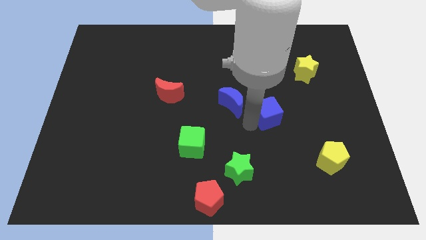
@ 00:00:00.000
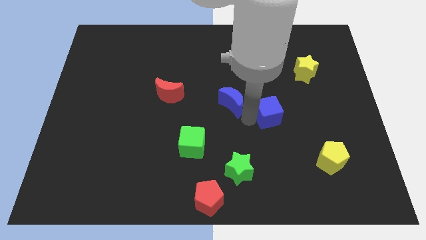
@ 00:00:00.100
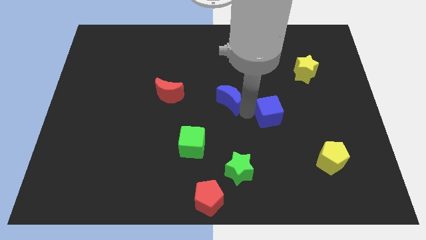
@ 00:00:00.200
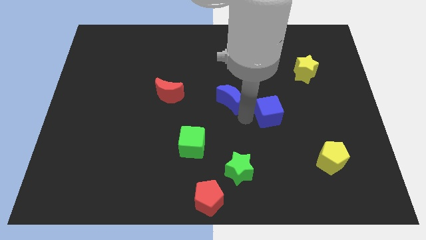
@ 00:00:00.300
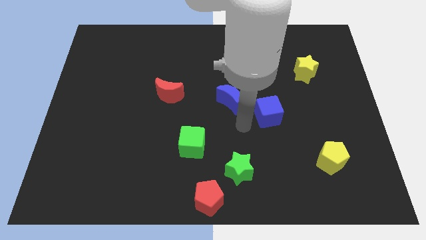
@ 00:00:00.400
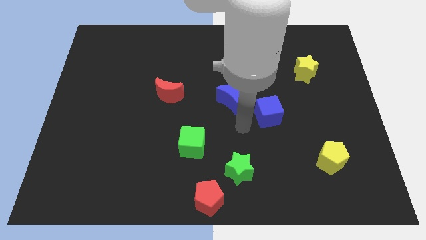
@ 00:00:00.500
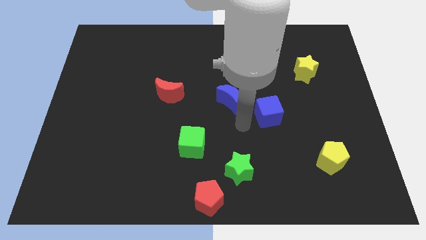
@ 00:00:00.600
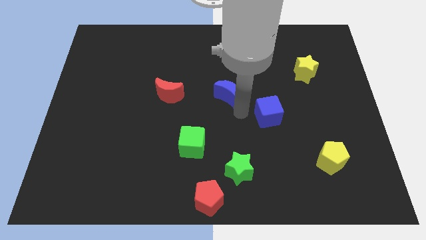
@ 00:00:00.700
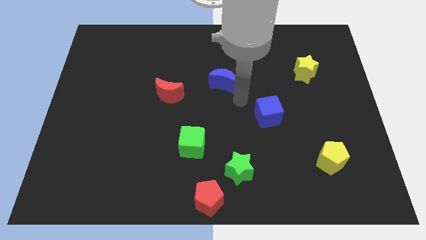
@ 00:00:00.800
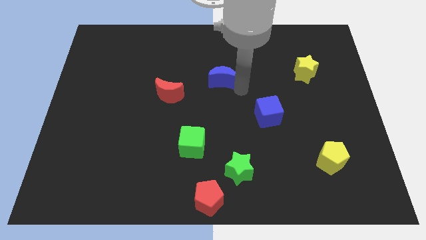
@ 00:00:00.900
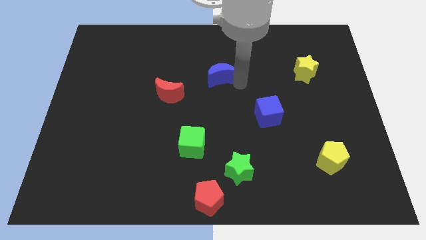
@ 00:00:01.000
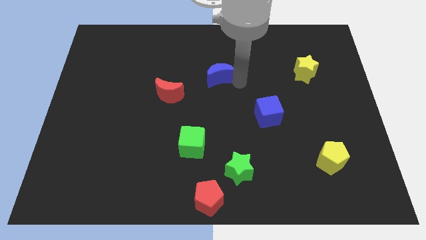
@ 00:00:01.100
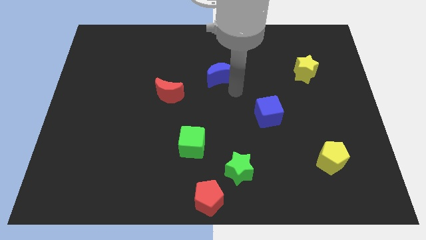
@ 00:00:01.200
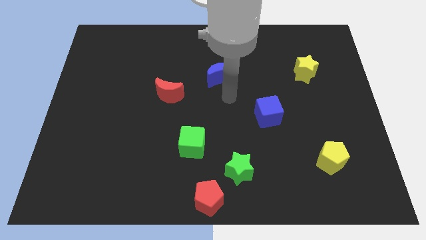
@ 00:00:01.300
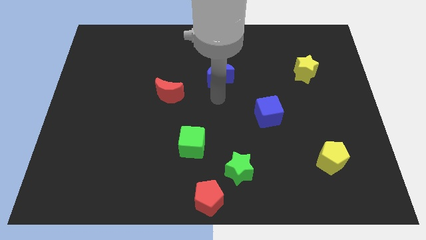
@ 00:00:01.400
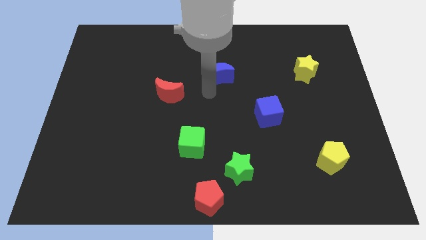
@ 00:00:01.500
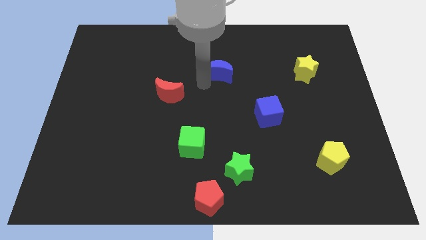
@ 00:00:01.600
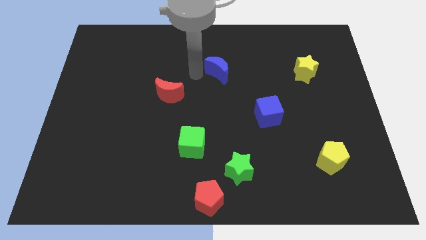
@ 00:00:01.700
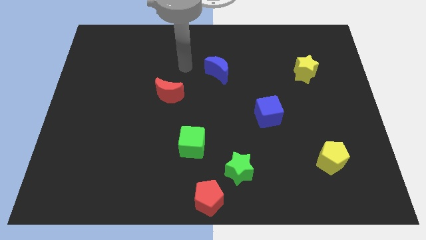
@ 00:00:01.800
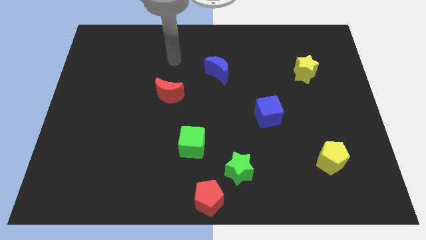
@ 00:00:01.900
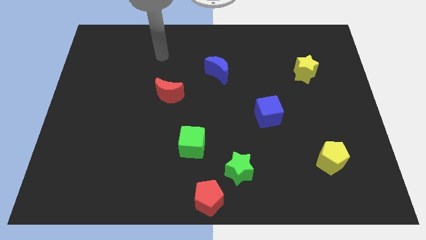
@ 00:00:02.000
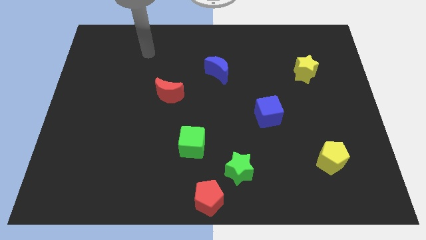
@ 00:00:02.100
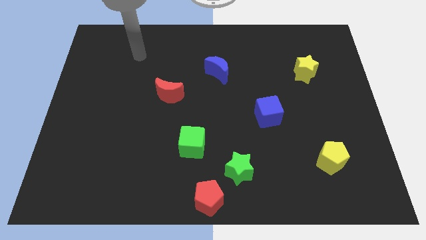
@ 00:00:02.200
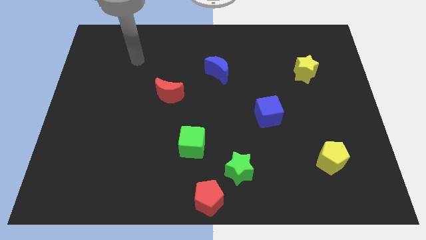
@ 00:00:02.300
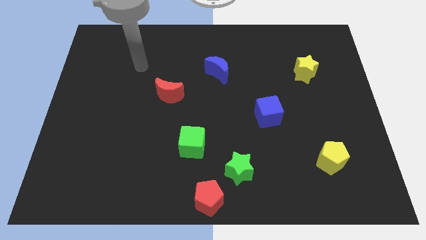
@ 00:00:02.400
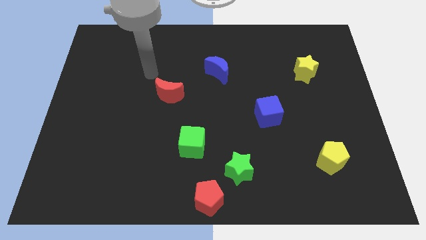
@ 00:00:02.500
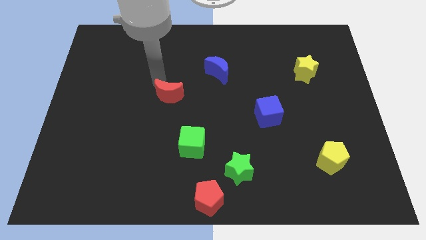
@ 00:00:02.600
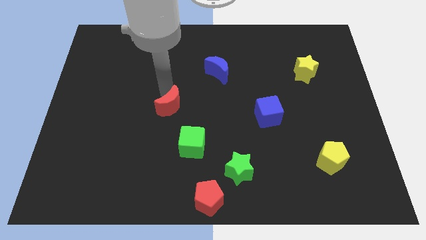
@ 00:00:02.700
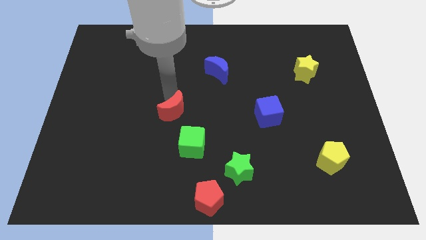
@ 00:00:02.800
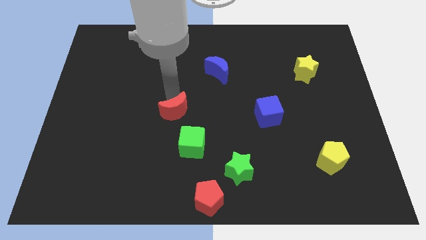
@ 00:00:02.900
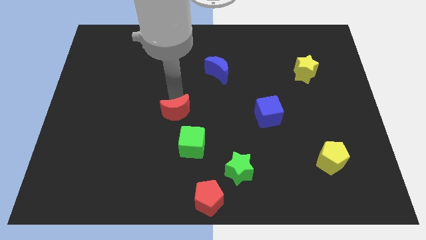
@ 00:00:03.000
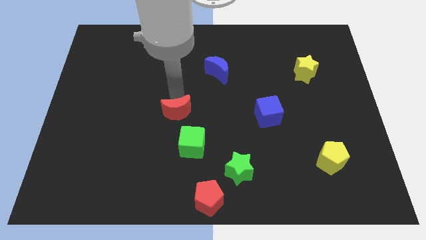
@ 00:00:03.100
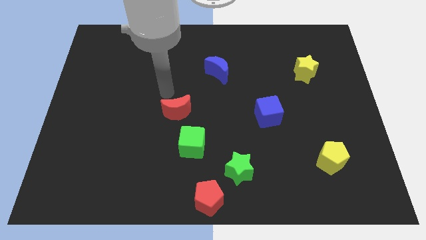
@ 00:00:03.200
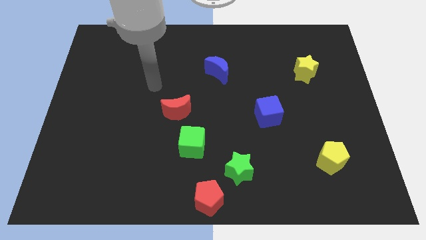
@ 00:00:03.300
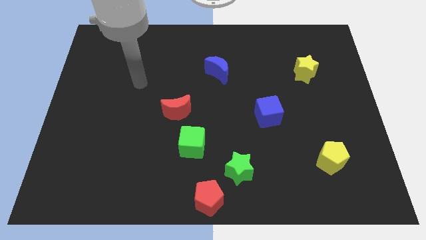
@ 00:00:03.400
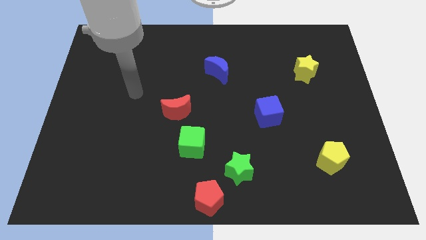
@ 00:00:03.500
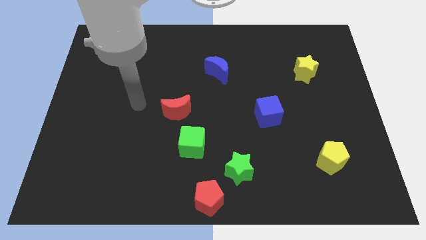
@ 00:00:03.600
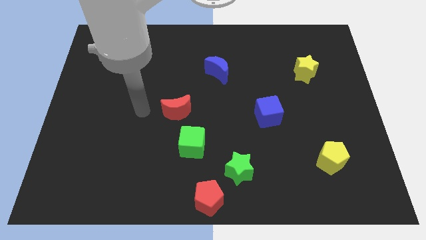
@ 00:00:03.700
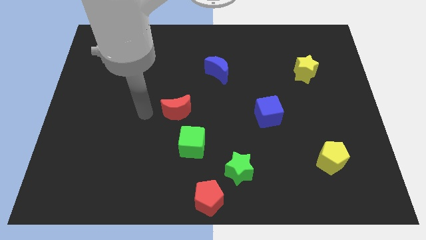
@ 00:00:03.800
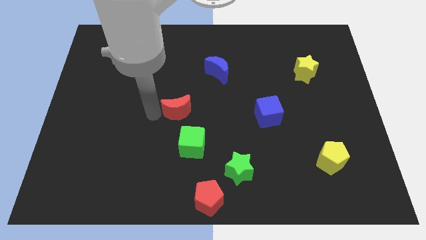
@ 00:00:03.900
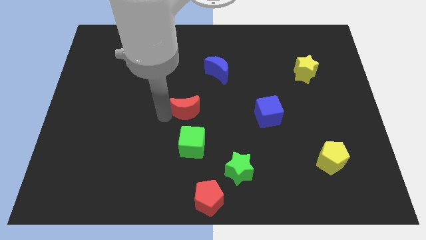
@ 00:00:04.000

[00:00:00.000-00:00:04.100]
make a triangle out of red moon and blue blocks

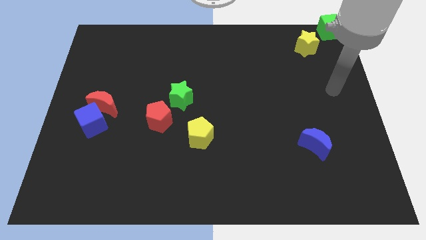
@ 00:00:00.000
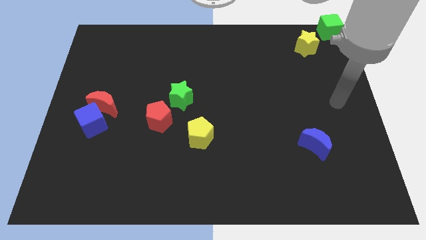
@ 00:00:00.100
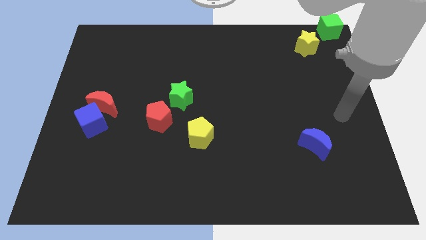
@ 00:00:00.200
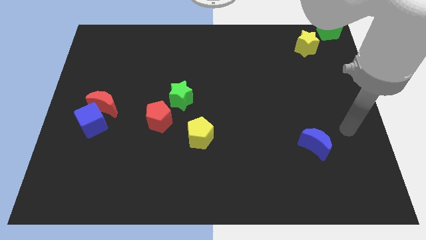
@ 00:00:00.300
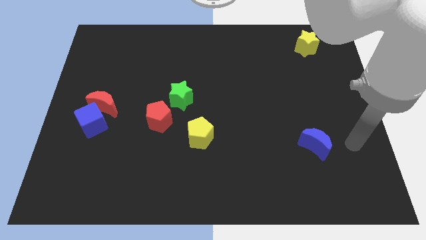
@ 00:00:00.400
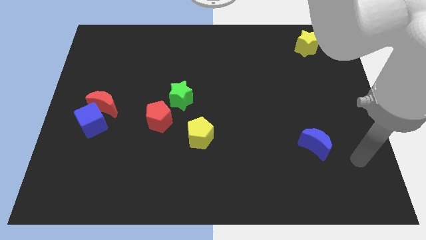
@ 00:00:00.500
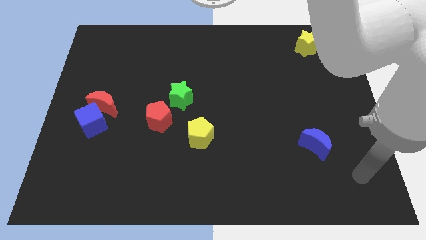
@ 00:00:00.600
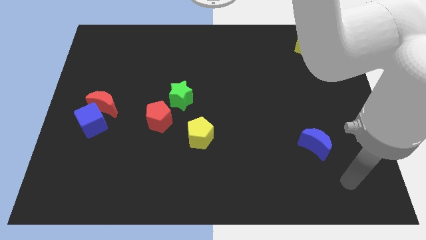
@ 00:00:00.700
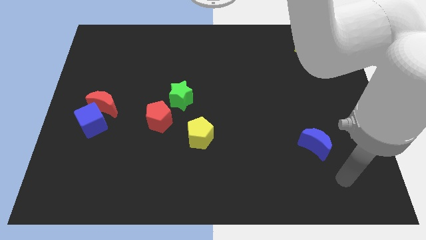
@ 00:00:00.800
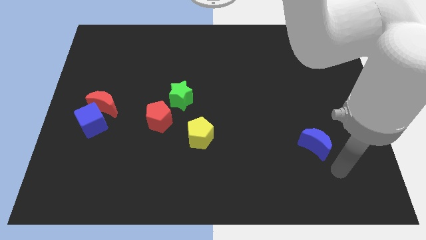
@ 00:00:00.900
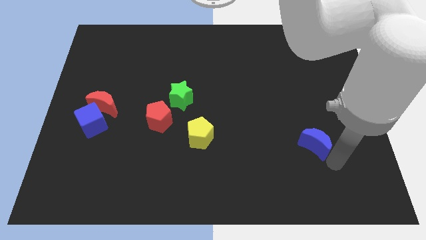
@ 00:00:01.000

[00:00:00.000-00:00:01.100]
move your arm into the blue moon

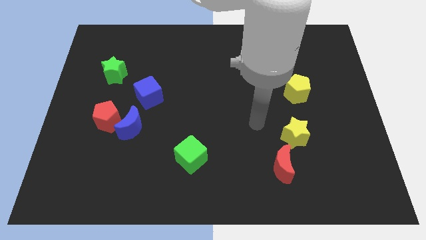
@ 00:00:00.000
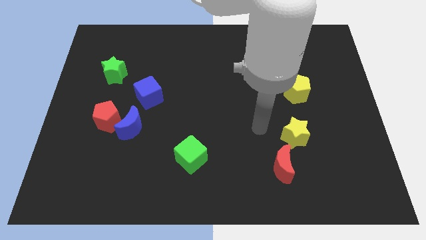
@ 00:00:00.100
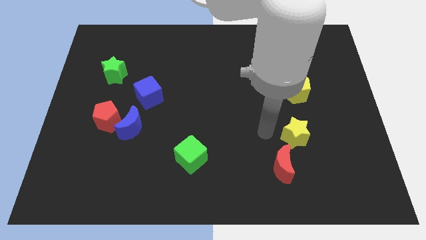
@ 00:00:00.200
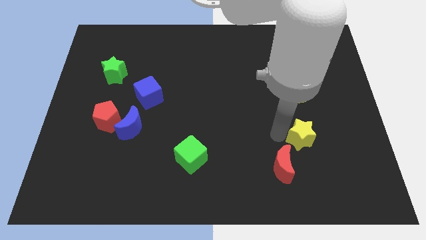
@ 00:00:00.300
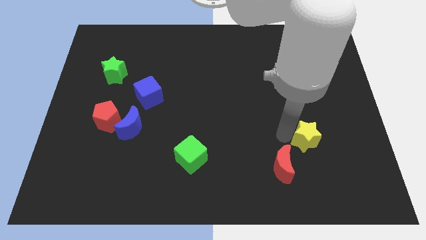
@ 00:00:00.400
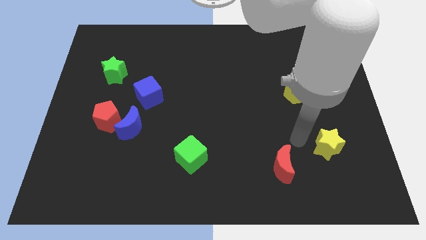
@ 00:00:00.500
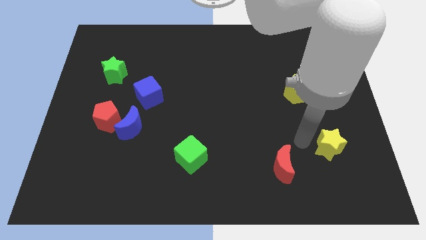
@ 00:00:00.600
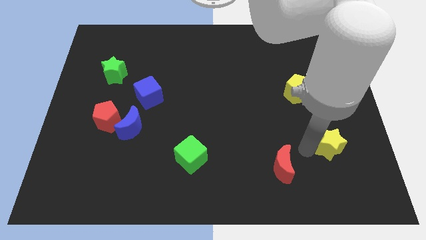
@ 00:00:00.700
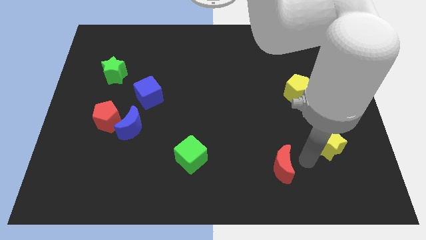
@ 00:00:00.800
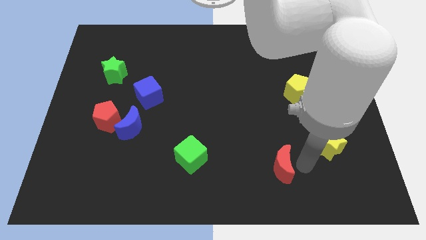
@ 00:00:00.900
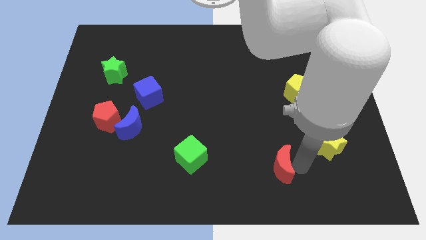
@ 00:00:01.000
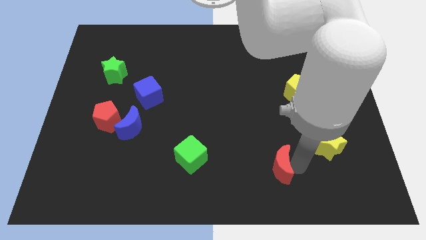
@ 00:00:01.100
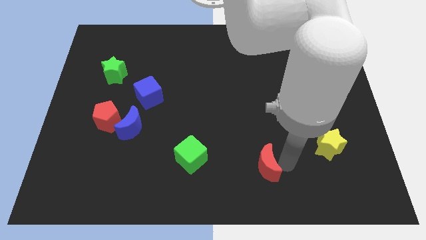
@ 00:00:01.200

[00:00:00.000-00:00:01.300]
separate the yellow star and red pentagon

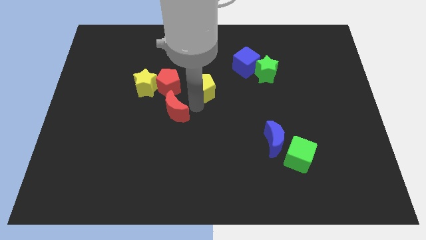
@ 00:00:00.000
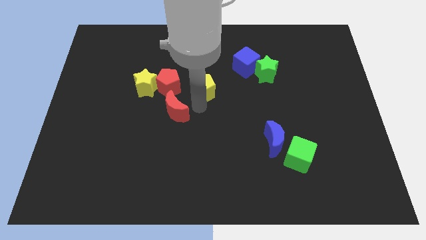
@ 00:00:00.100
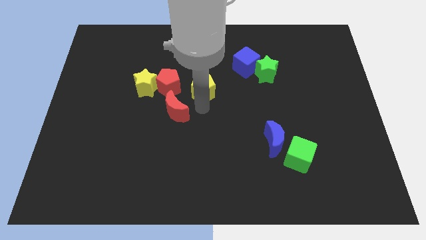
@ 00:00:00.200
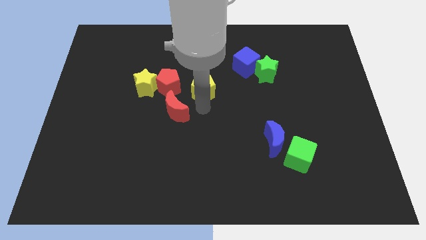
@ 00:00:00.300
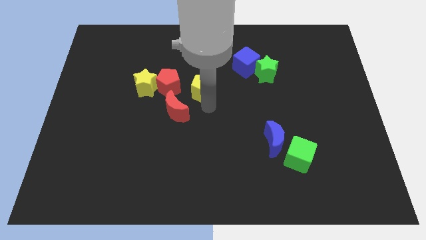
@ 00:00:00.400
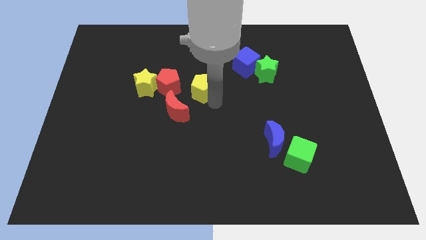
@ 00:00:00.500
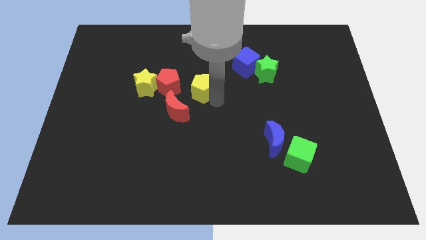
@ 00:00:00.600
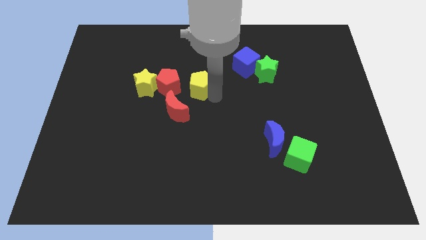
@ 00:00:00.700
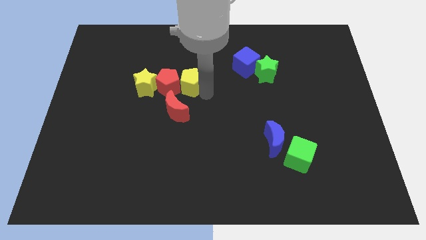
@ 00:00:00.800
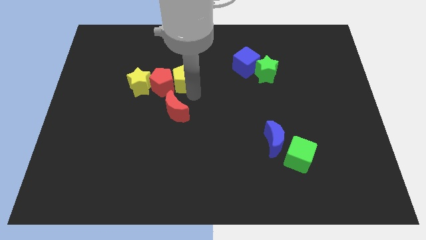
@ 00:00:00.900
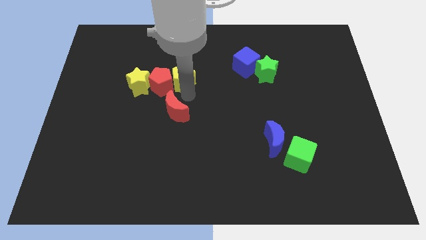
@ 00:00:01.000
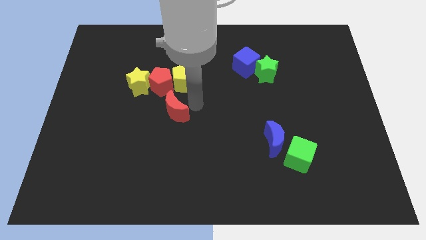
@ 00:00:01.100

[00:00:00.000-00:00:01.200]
push the yellow pentagon into the red pentagon

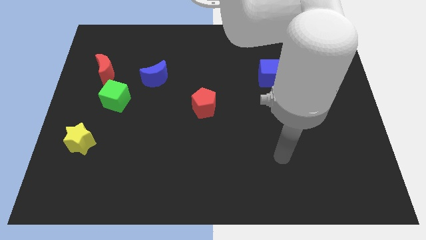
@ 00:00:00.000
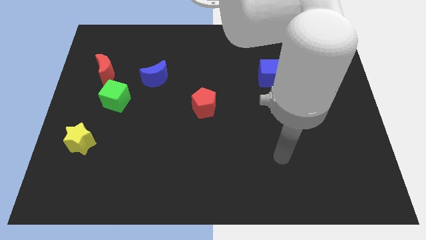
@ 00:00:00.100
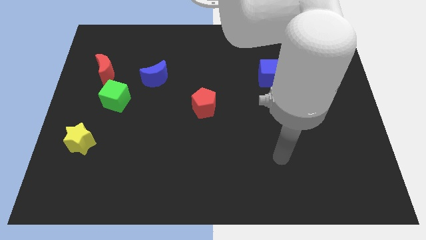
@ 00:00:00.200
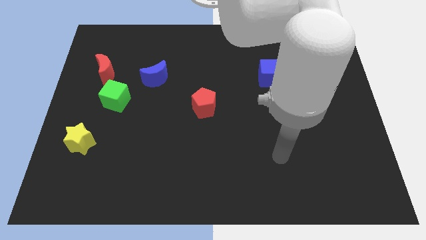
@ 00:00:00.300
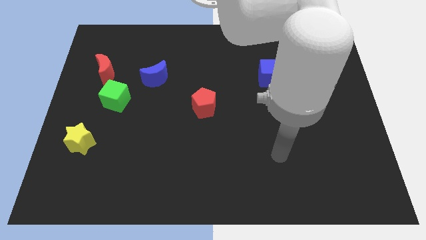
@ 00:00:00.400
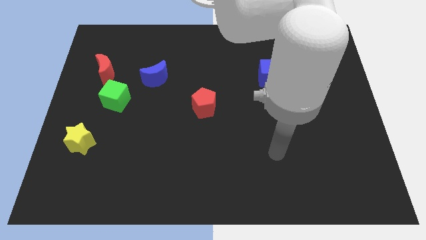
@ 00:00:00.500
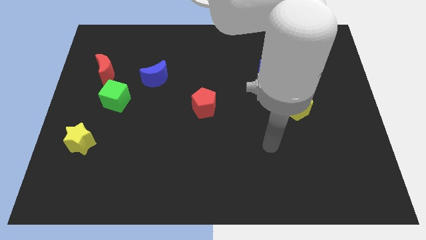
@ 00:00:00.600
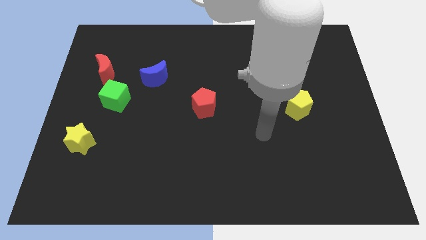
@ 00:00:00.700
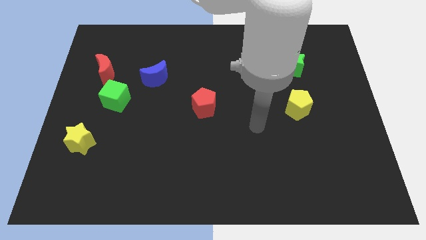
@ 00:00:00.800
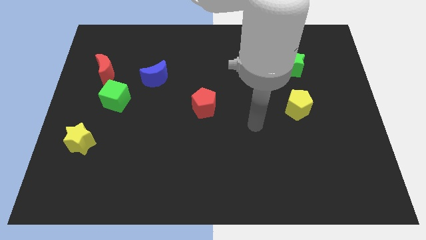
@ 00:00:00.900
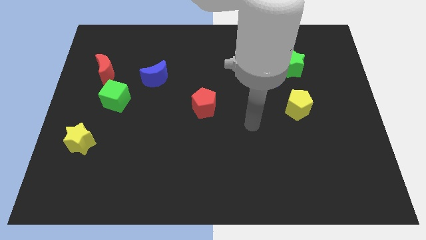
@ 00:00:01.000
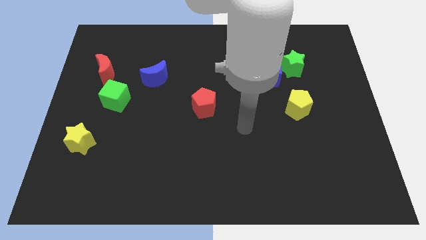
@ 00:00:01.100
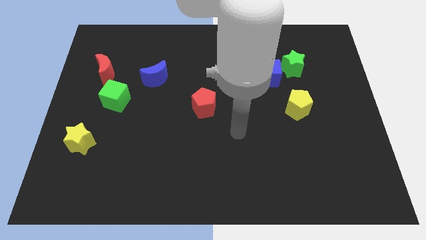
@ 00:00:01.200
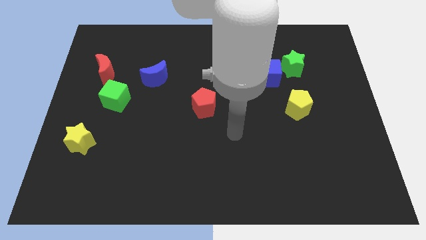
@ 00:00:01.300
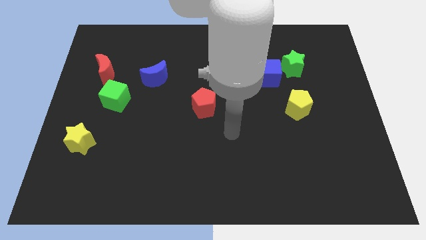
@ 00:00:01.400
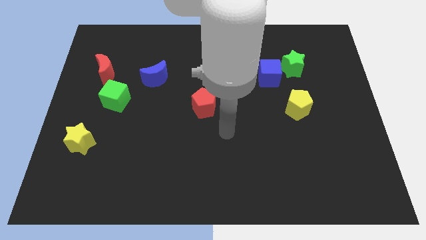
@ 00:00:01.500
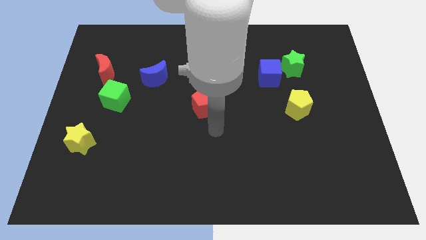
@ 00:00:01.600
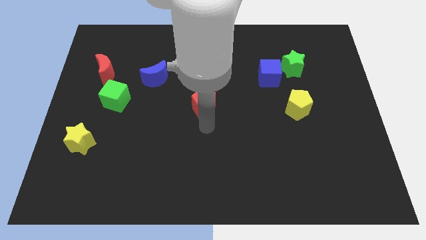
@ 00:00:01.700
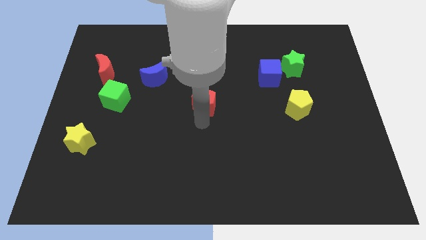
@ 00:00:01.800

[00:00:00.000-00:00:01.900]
touch the bottom of the red pentagon
